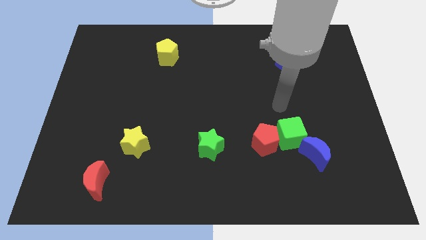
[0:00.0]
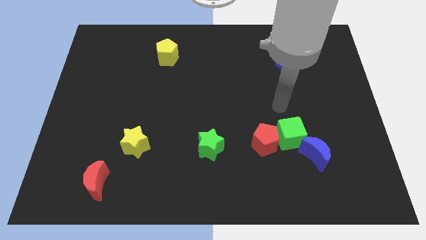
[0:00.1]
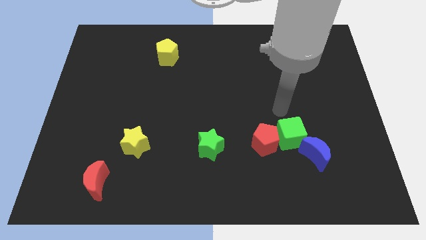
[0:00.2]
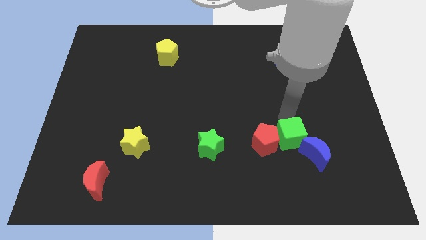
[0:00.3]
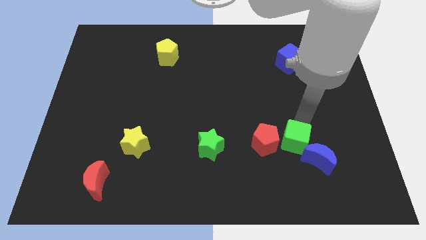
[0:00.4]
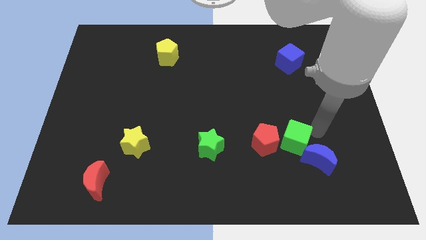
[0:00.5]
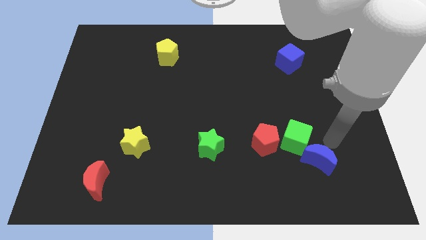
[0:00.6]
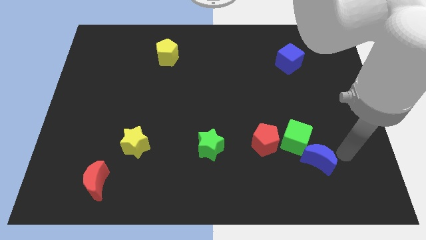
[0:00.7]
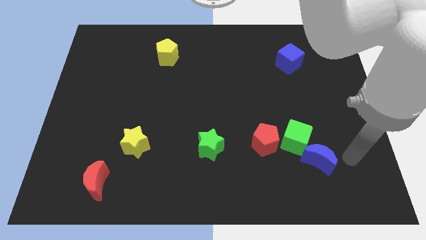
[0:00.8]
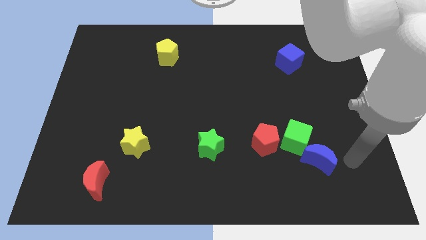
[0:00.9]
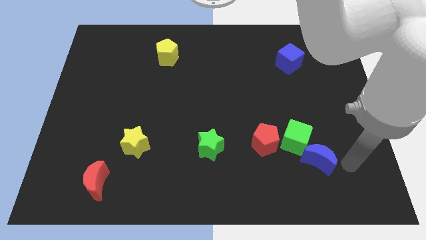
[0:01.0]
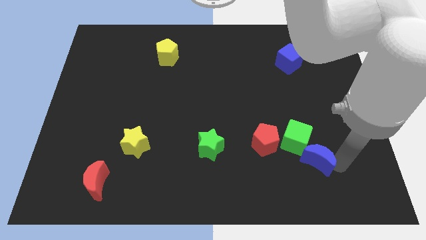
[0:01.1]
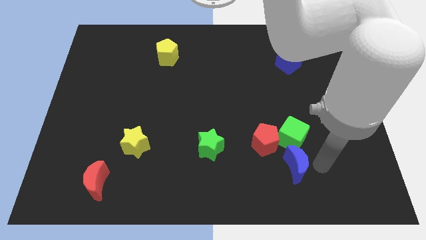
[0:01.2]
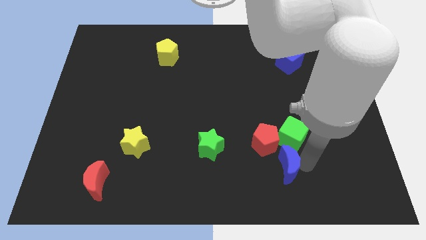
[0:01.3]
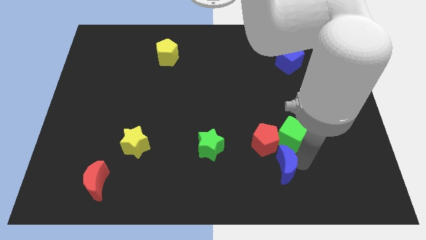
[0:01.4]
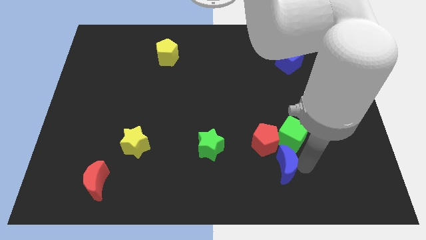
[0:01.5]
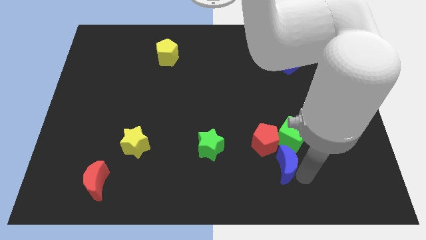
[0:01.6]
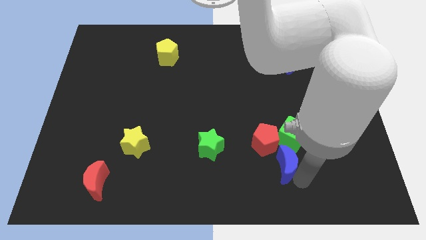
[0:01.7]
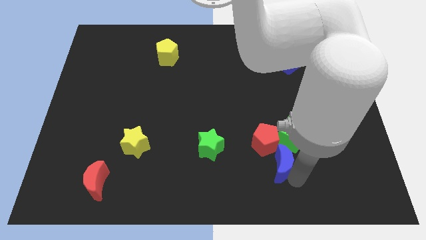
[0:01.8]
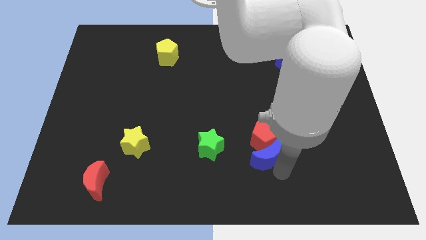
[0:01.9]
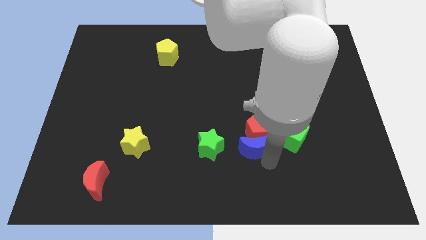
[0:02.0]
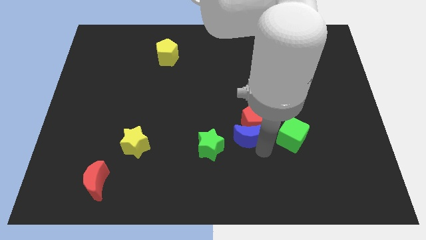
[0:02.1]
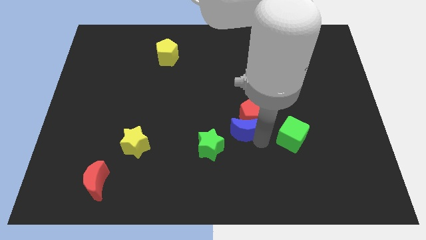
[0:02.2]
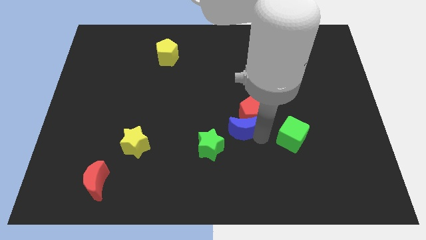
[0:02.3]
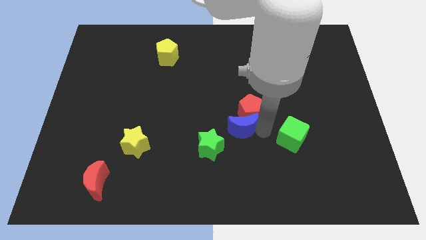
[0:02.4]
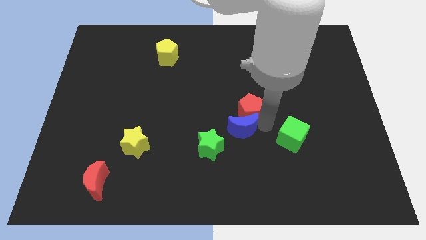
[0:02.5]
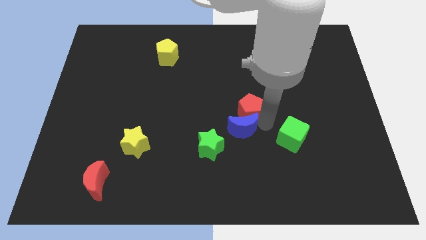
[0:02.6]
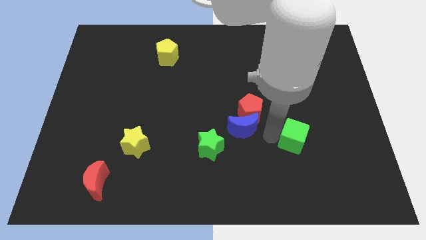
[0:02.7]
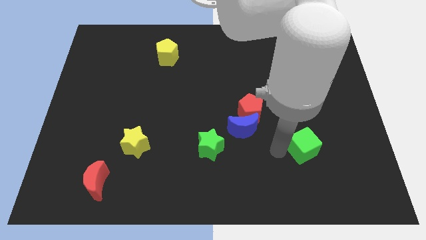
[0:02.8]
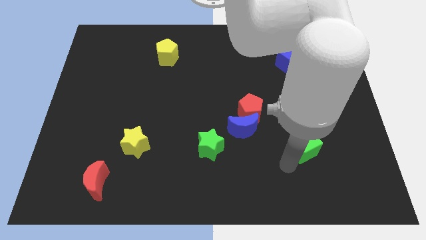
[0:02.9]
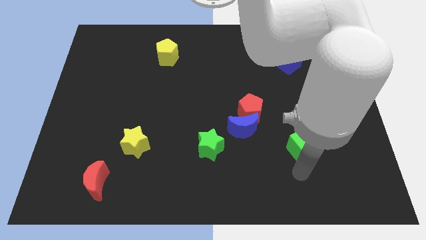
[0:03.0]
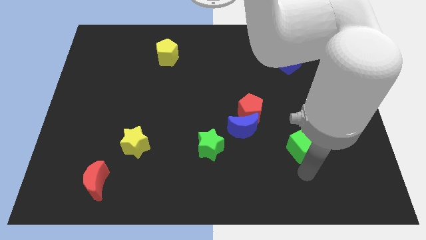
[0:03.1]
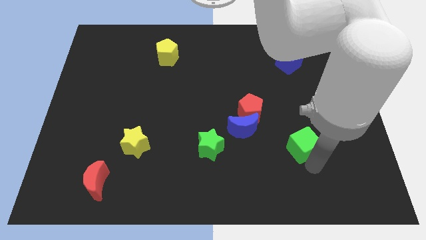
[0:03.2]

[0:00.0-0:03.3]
push blue moon into red pentagon

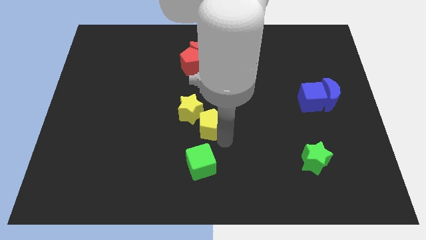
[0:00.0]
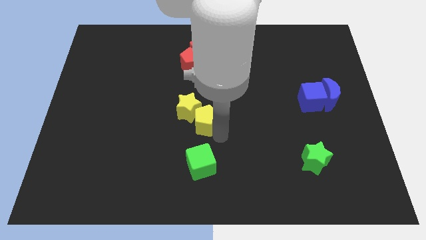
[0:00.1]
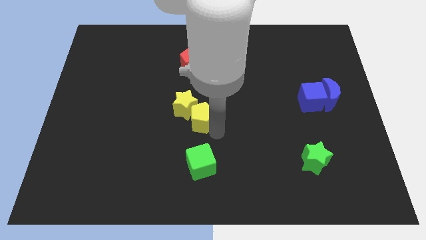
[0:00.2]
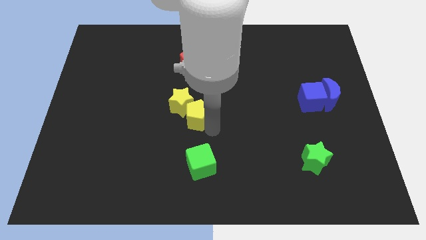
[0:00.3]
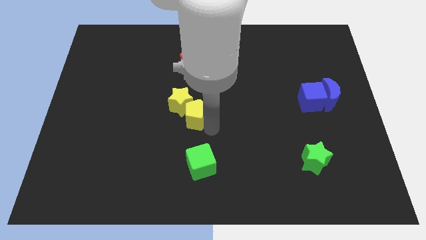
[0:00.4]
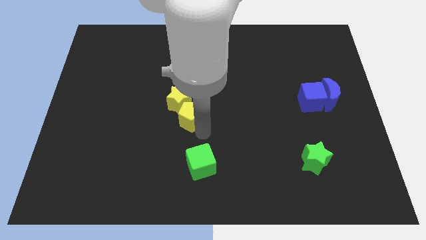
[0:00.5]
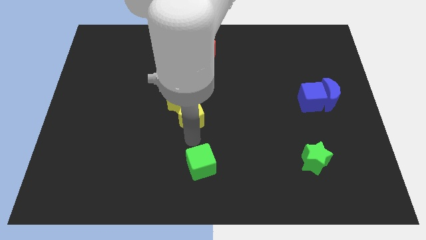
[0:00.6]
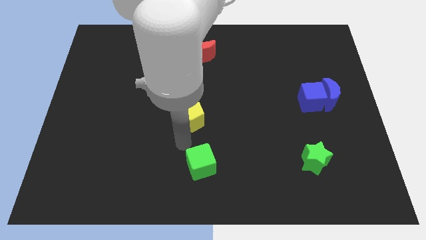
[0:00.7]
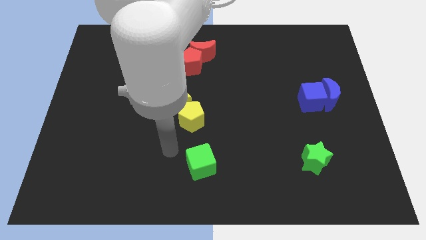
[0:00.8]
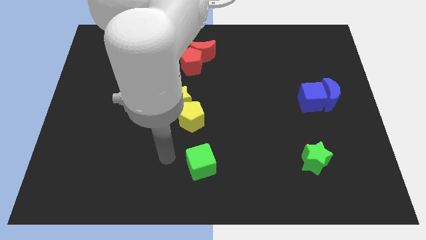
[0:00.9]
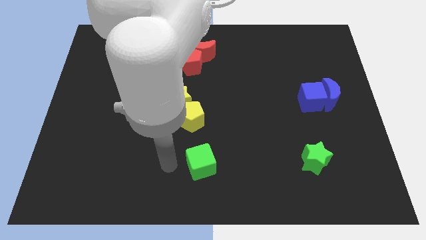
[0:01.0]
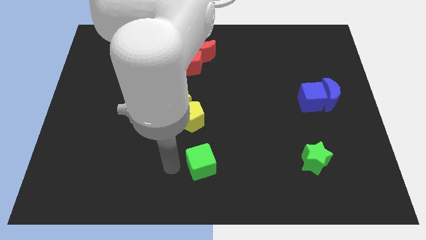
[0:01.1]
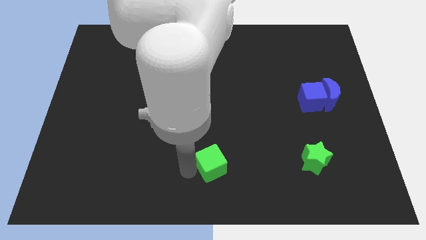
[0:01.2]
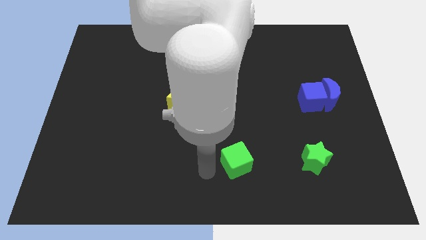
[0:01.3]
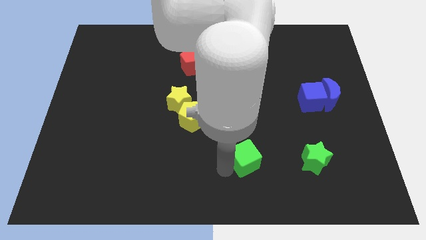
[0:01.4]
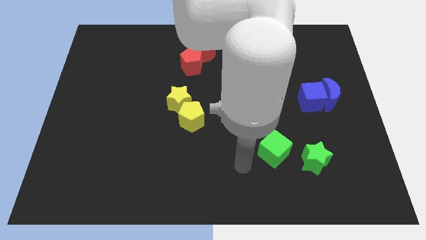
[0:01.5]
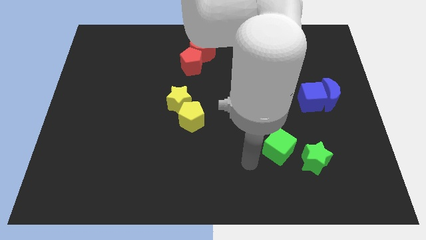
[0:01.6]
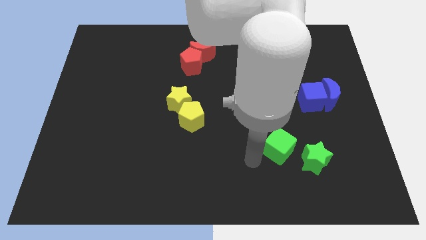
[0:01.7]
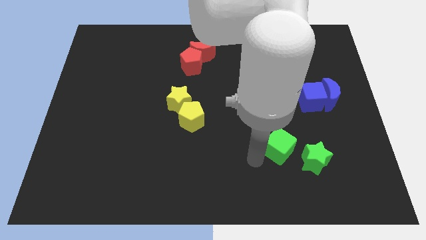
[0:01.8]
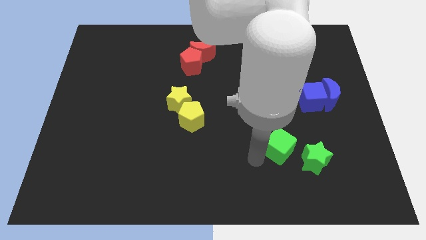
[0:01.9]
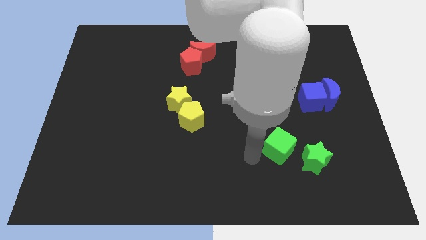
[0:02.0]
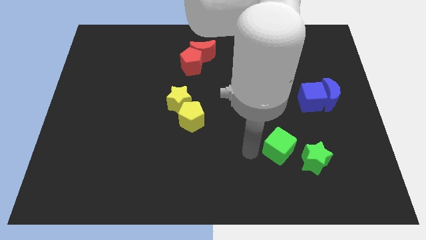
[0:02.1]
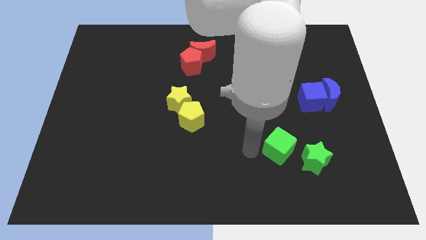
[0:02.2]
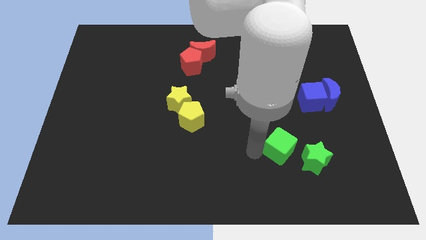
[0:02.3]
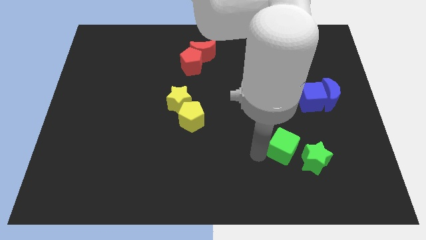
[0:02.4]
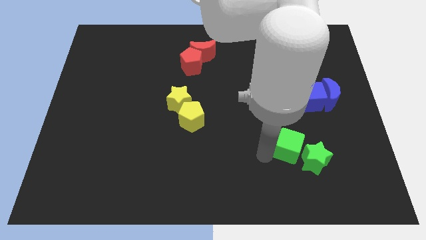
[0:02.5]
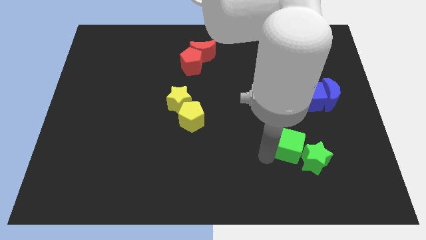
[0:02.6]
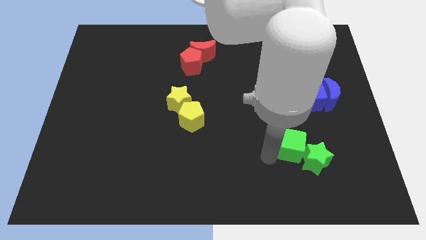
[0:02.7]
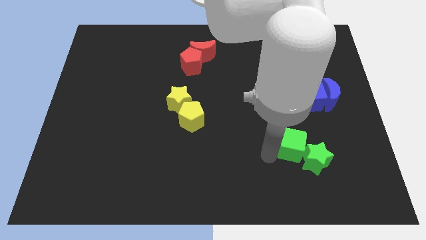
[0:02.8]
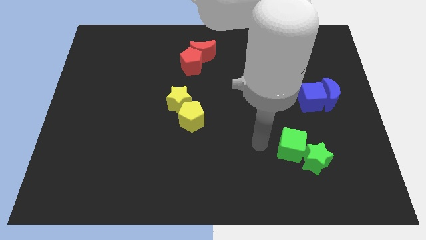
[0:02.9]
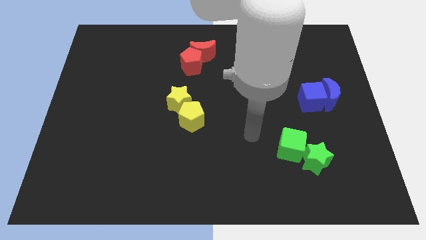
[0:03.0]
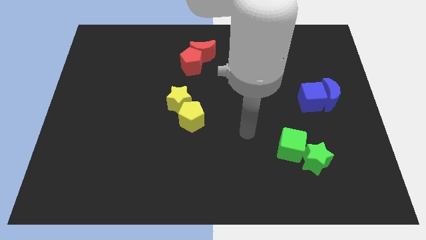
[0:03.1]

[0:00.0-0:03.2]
slide the green cube into the green star

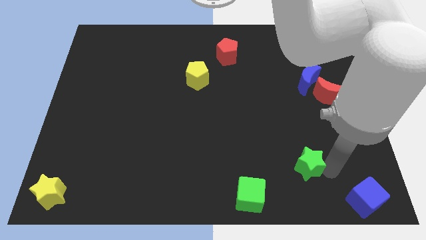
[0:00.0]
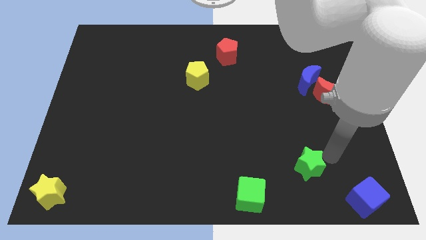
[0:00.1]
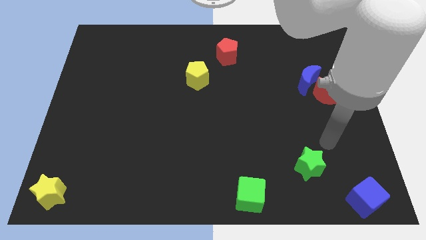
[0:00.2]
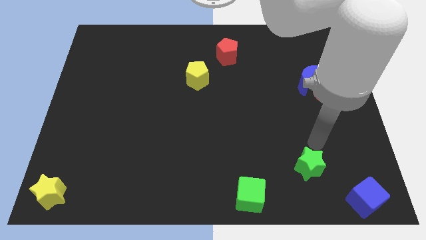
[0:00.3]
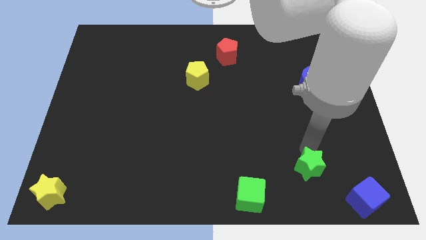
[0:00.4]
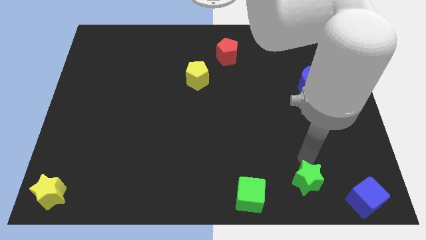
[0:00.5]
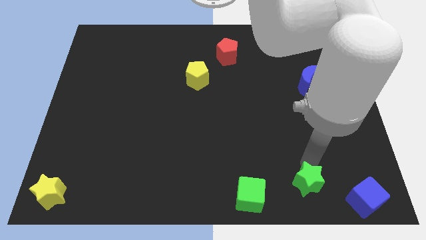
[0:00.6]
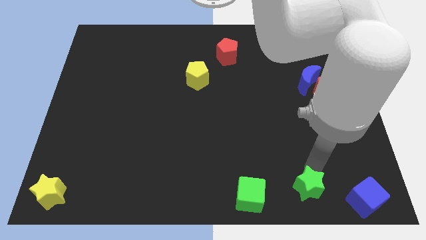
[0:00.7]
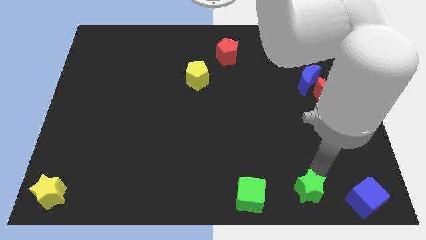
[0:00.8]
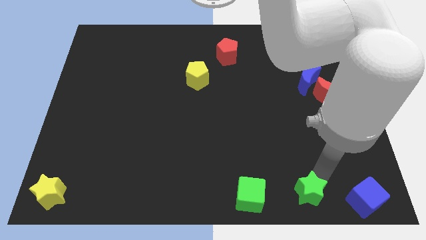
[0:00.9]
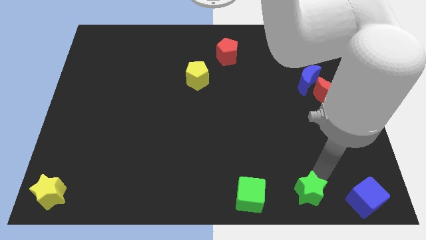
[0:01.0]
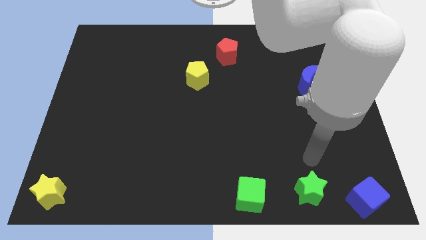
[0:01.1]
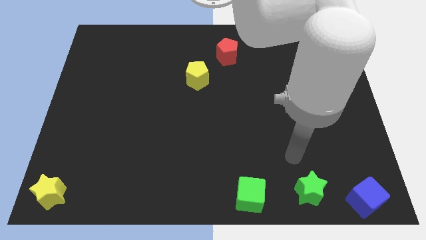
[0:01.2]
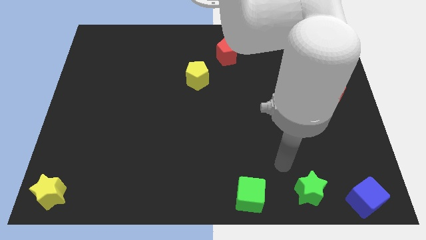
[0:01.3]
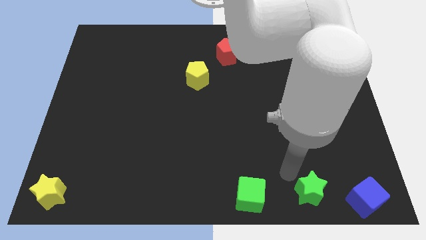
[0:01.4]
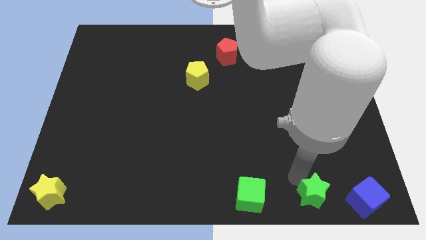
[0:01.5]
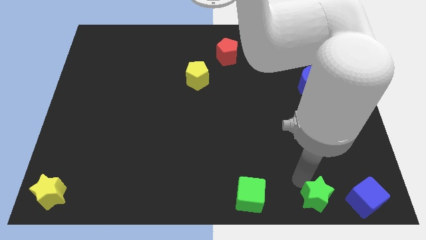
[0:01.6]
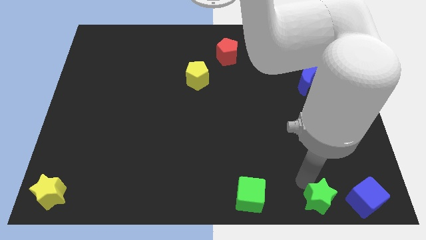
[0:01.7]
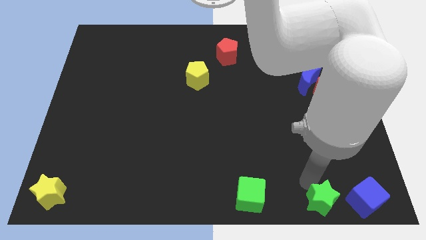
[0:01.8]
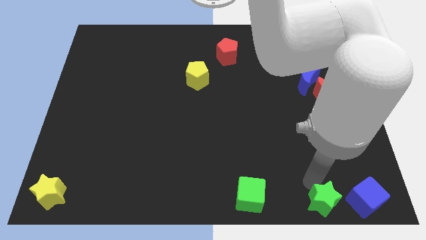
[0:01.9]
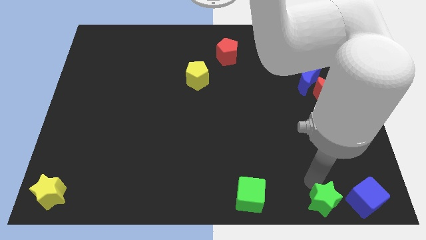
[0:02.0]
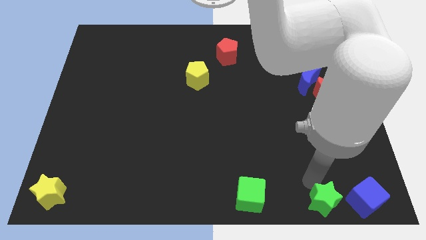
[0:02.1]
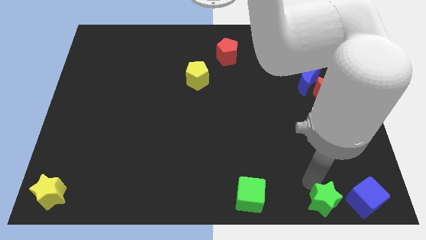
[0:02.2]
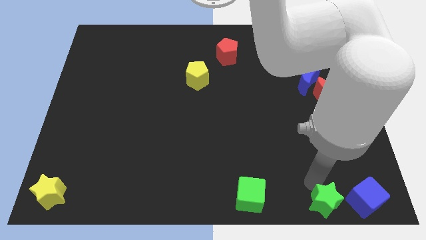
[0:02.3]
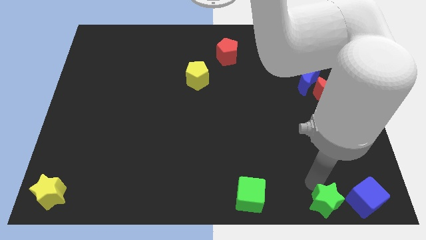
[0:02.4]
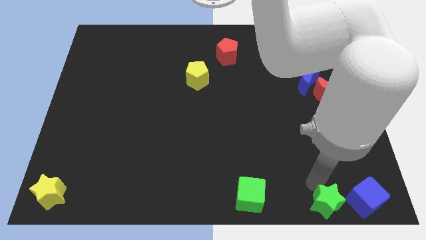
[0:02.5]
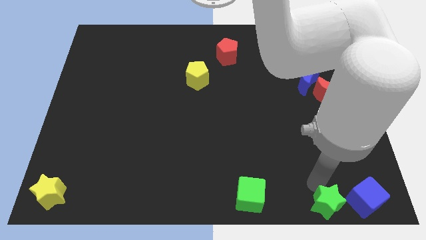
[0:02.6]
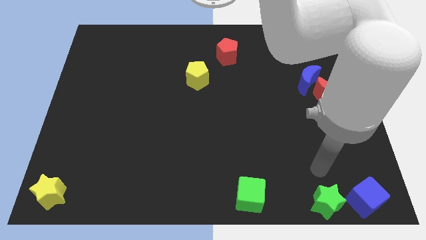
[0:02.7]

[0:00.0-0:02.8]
push the green star next to the blue cube
